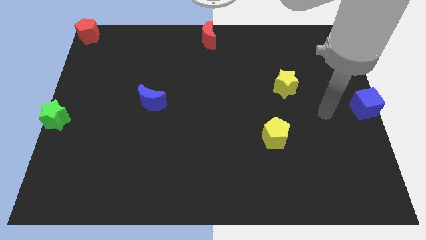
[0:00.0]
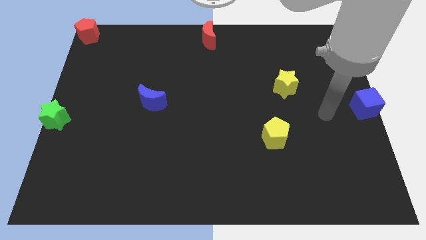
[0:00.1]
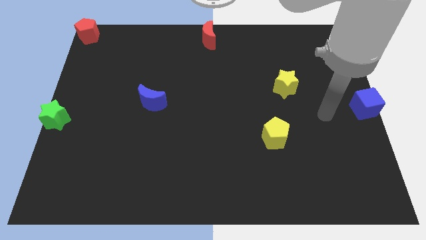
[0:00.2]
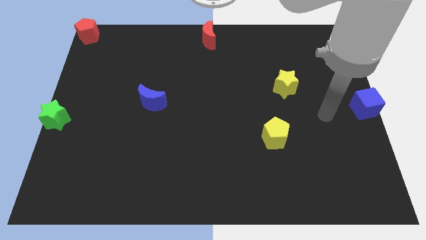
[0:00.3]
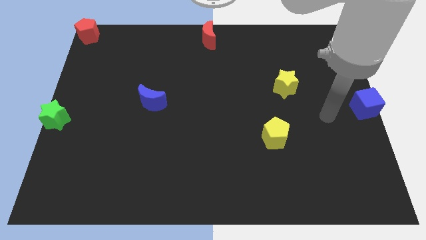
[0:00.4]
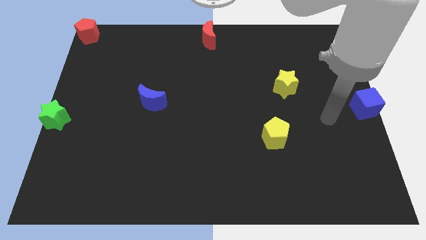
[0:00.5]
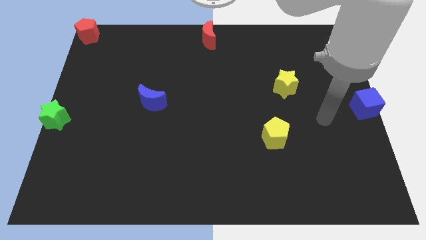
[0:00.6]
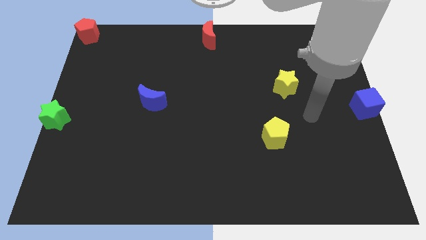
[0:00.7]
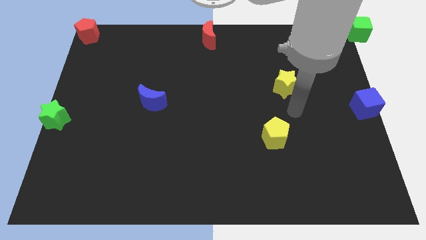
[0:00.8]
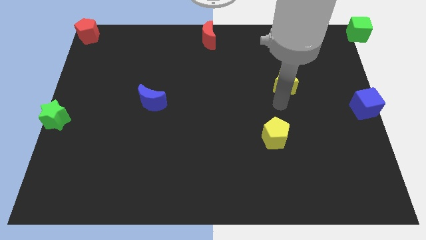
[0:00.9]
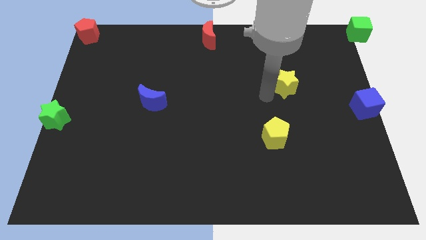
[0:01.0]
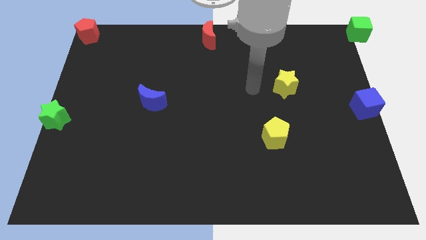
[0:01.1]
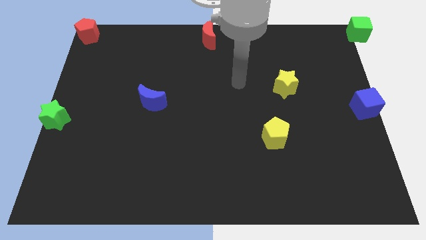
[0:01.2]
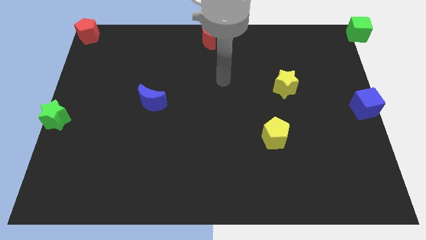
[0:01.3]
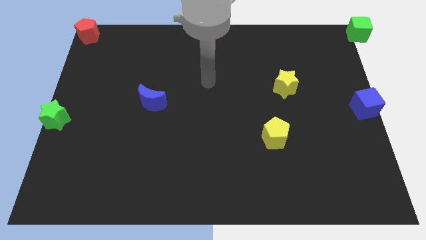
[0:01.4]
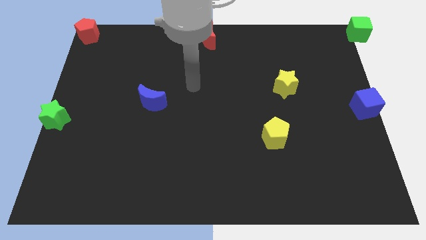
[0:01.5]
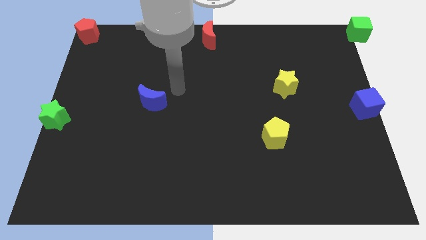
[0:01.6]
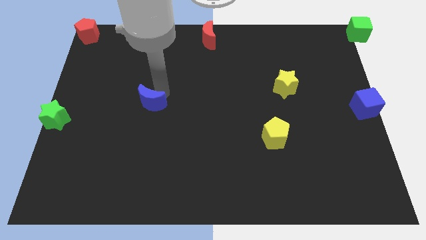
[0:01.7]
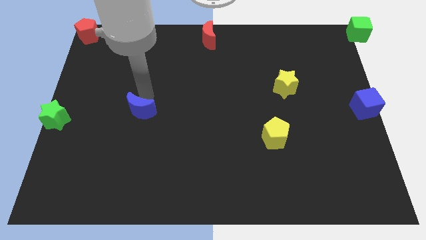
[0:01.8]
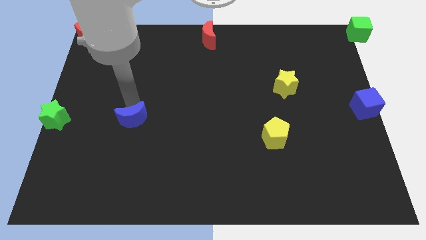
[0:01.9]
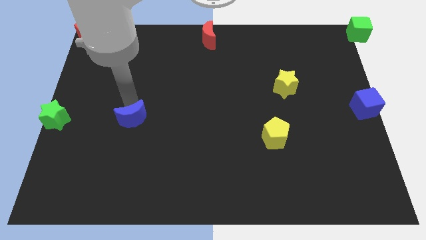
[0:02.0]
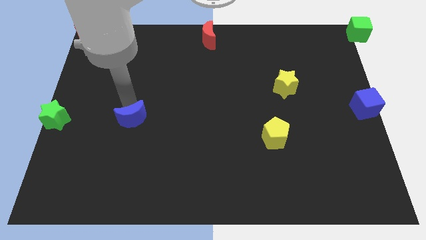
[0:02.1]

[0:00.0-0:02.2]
put the blue crescent to the right of the green star

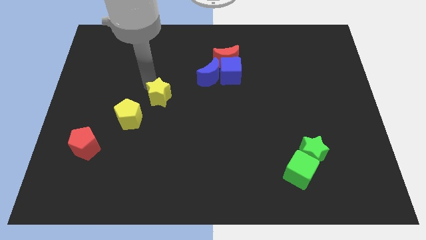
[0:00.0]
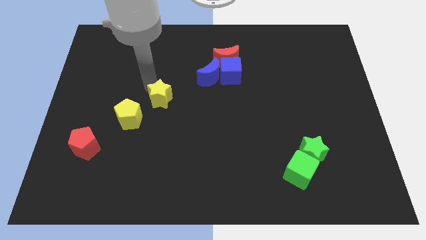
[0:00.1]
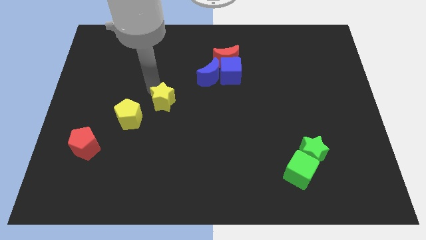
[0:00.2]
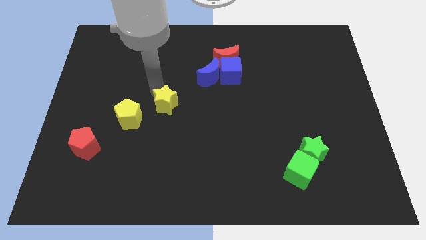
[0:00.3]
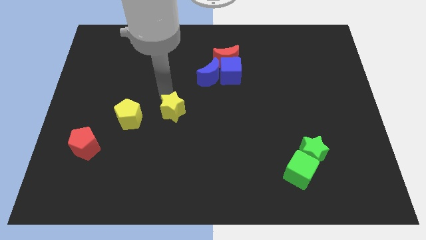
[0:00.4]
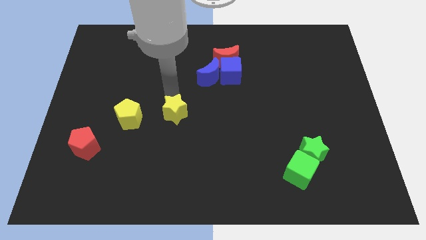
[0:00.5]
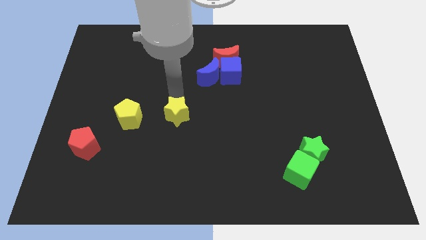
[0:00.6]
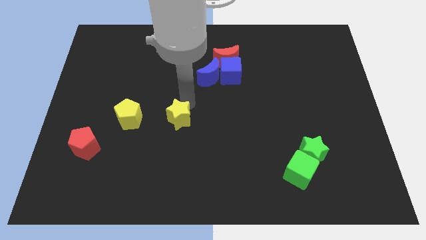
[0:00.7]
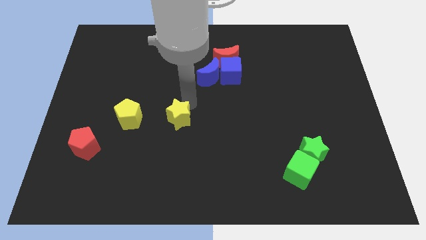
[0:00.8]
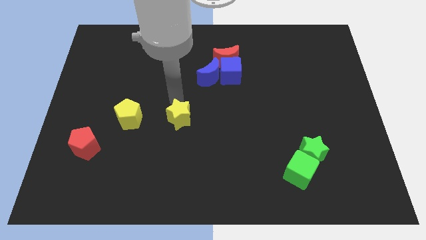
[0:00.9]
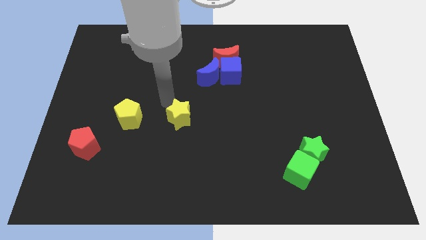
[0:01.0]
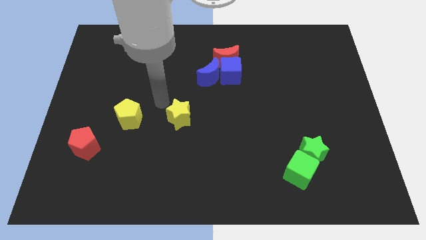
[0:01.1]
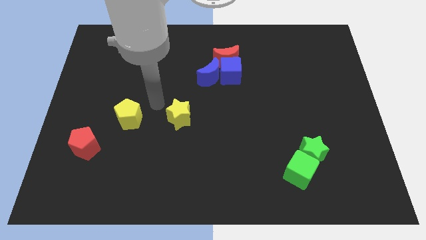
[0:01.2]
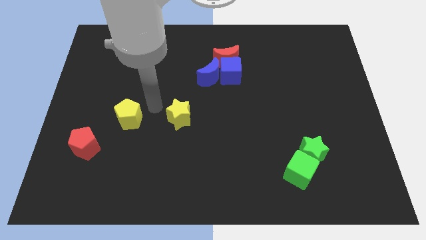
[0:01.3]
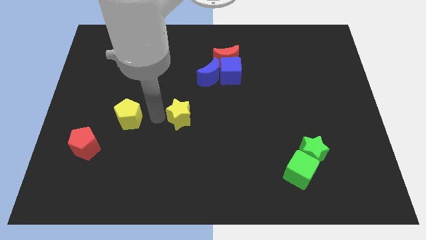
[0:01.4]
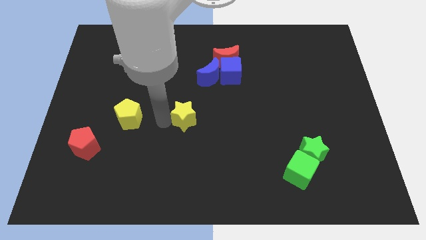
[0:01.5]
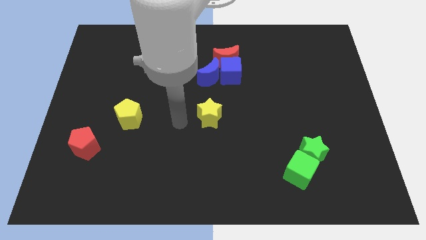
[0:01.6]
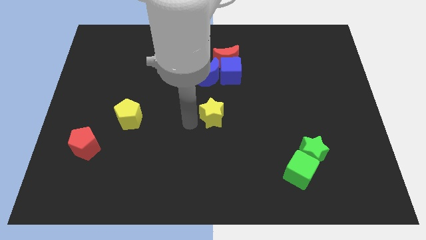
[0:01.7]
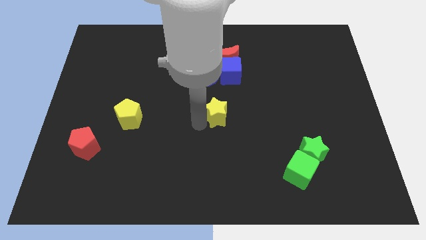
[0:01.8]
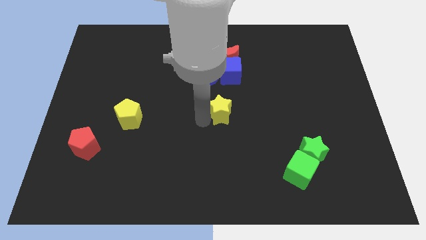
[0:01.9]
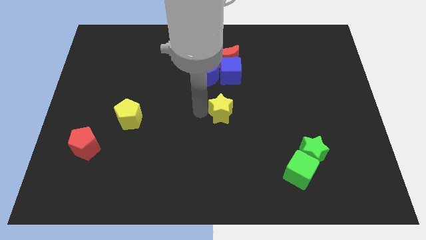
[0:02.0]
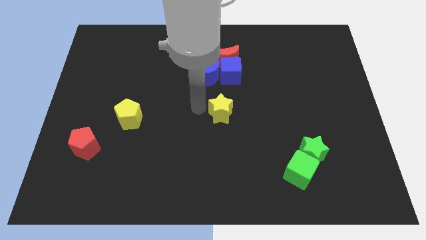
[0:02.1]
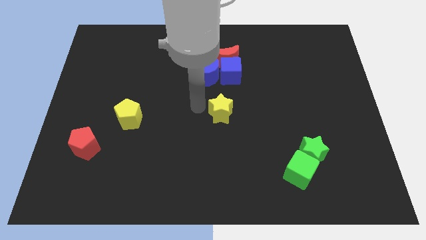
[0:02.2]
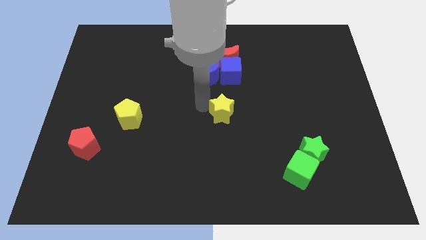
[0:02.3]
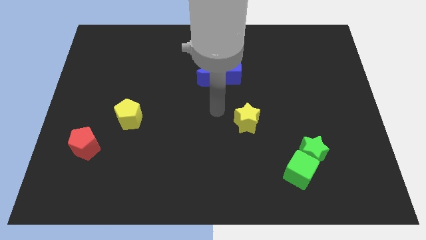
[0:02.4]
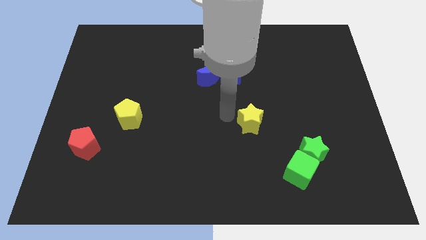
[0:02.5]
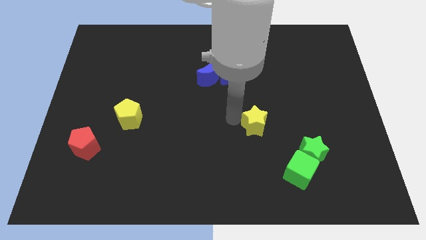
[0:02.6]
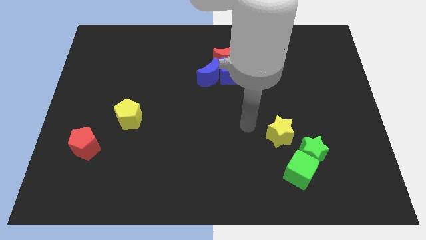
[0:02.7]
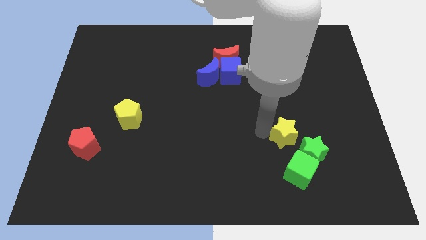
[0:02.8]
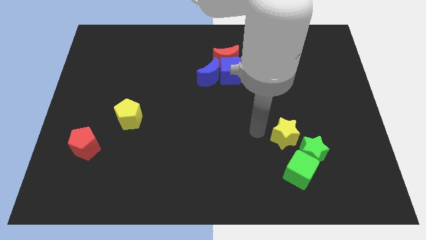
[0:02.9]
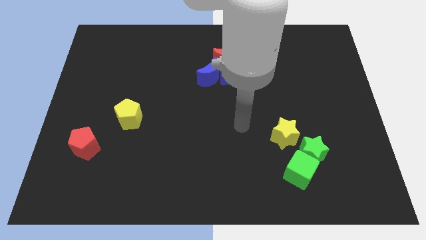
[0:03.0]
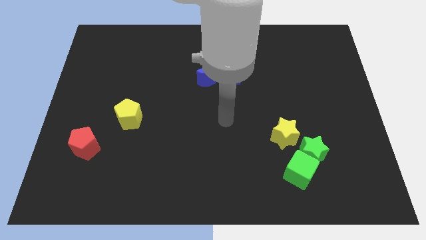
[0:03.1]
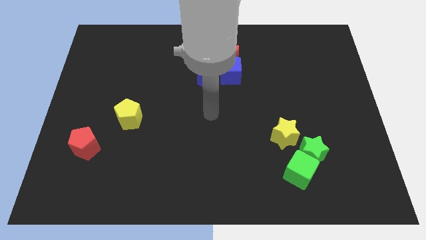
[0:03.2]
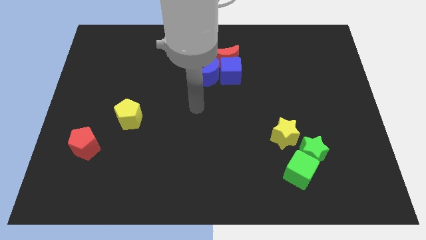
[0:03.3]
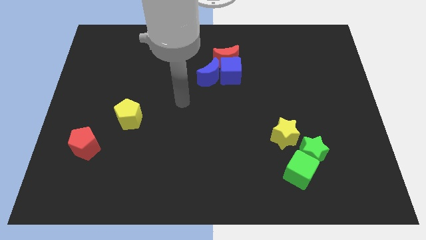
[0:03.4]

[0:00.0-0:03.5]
push the yellow star to the right side of the board

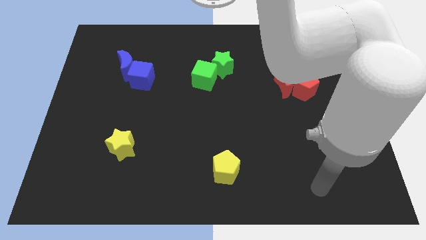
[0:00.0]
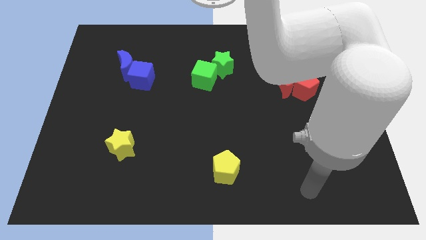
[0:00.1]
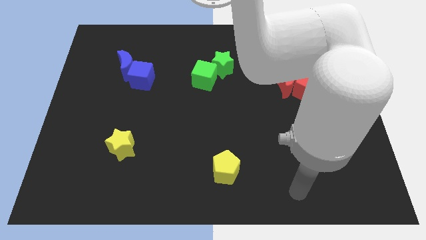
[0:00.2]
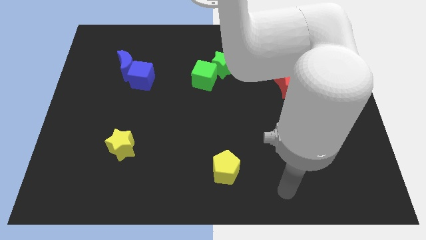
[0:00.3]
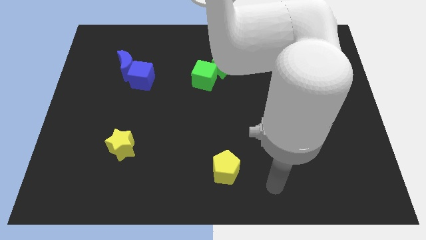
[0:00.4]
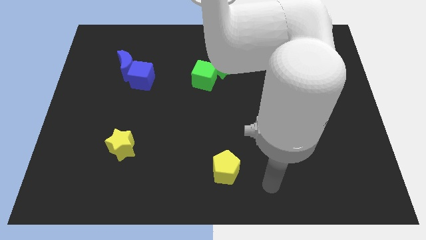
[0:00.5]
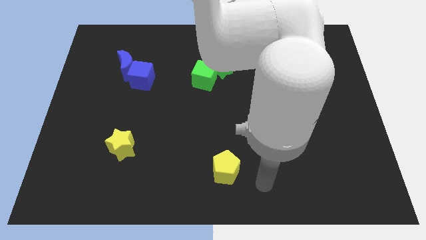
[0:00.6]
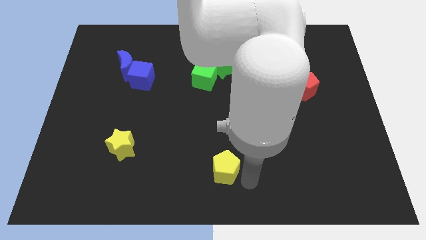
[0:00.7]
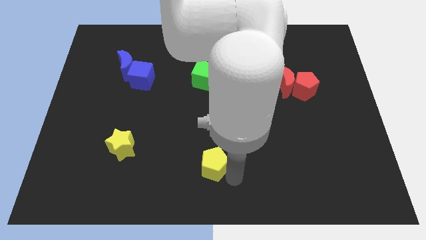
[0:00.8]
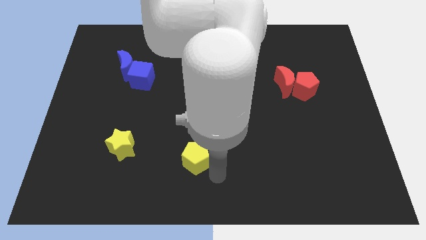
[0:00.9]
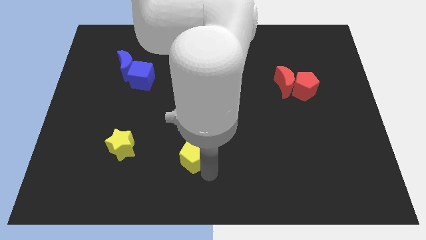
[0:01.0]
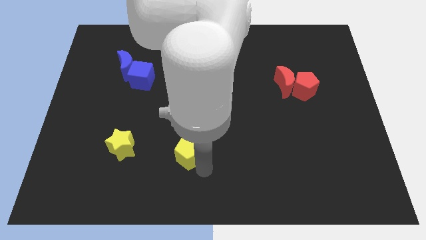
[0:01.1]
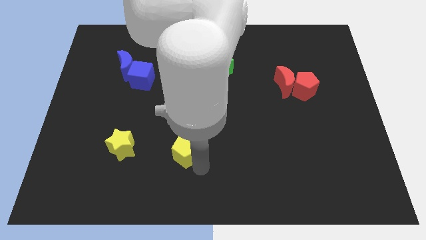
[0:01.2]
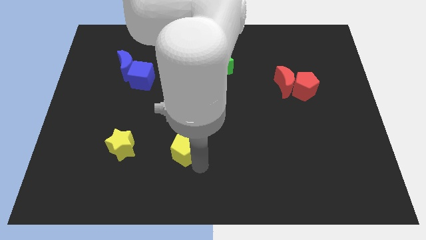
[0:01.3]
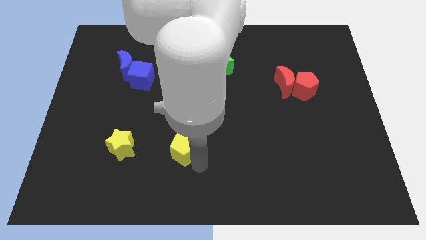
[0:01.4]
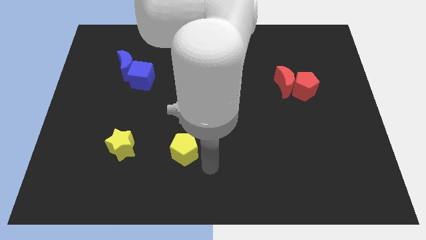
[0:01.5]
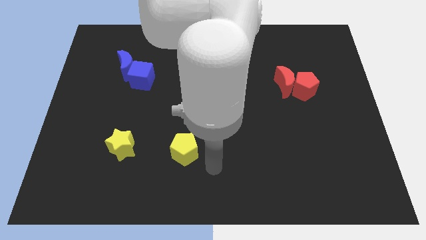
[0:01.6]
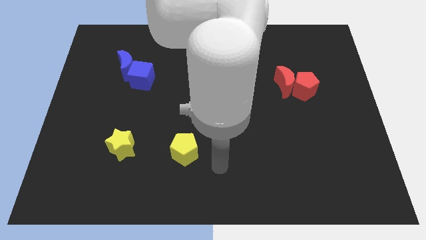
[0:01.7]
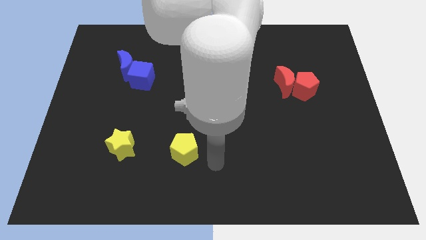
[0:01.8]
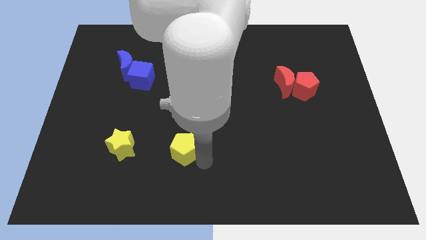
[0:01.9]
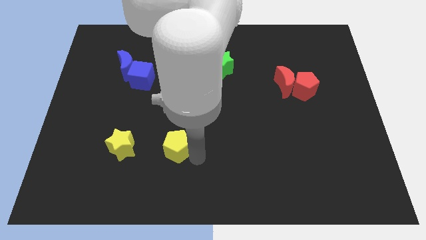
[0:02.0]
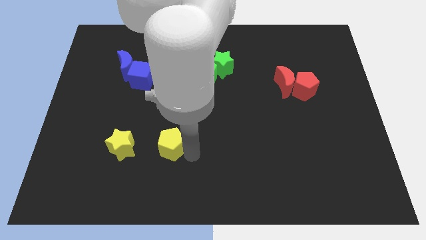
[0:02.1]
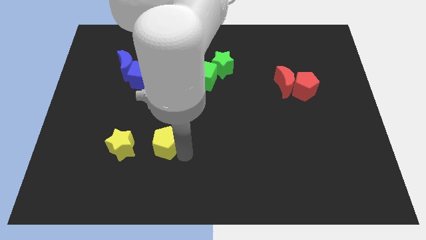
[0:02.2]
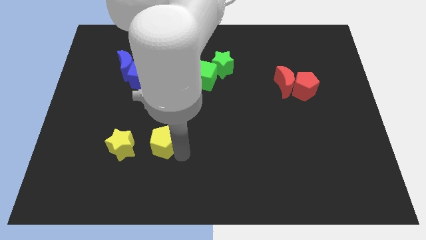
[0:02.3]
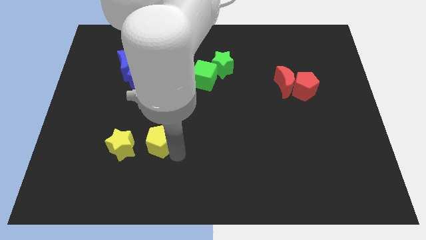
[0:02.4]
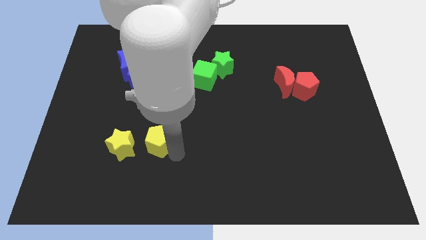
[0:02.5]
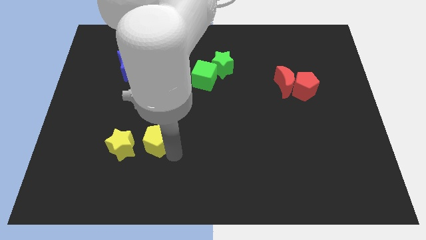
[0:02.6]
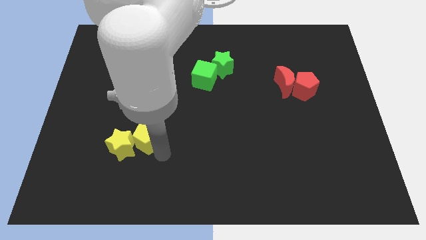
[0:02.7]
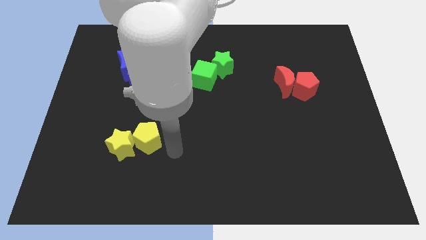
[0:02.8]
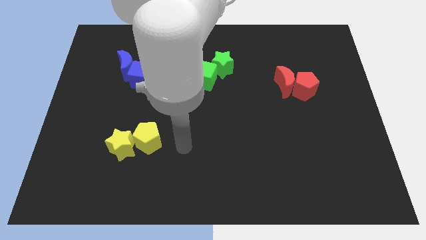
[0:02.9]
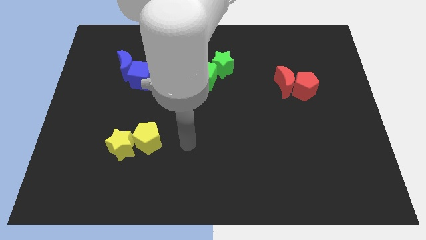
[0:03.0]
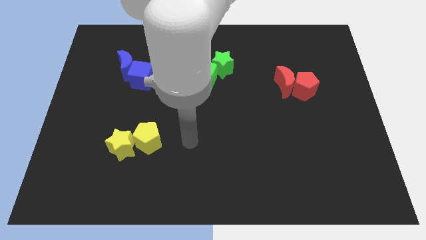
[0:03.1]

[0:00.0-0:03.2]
push the yellow pentagon into the yellow star
